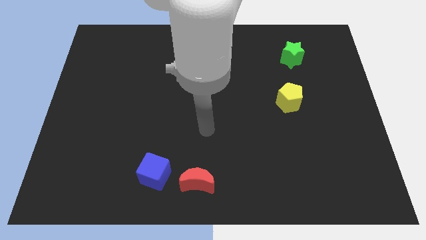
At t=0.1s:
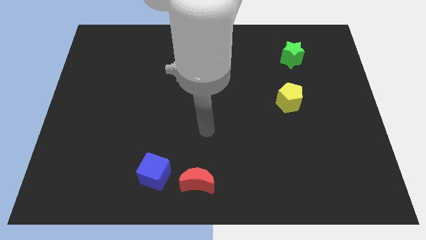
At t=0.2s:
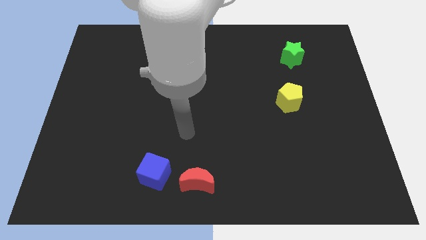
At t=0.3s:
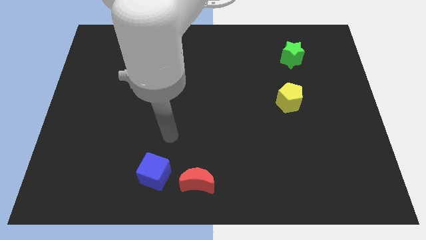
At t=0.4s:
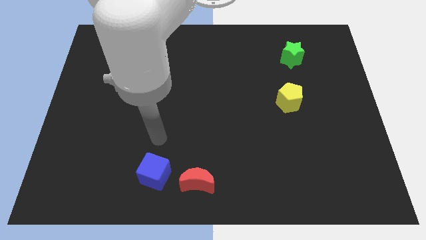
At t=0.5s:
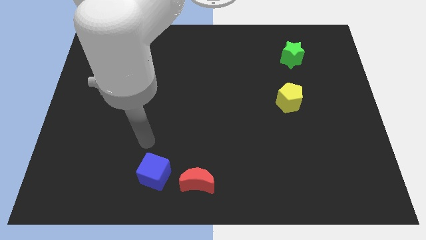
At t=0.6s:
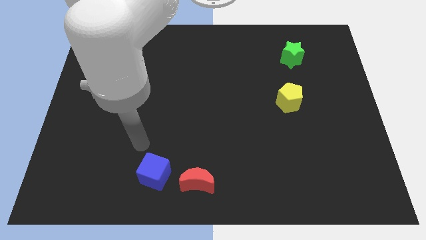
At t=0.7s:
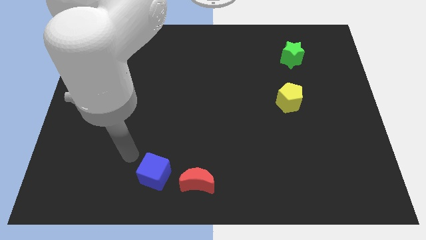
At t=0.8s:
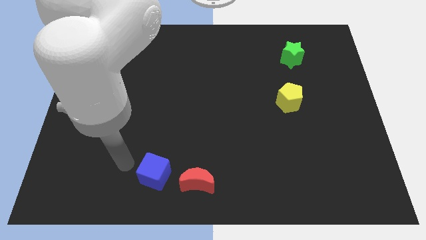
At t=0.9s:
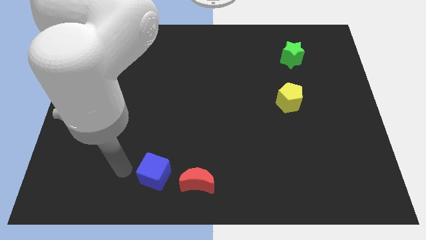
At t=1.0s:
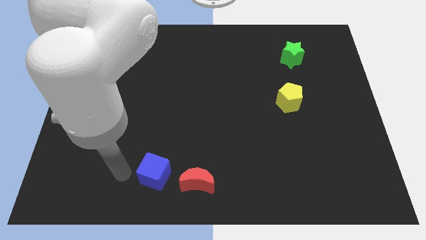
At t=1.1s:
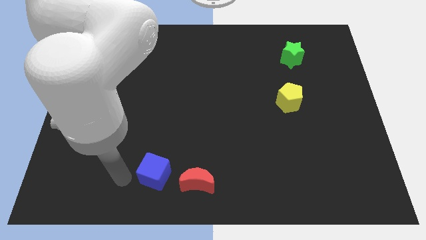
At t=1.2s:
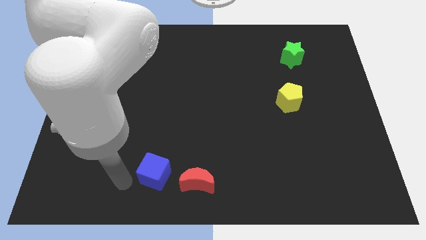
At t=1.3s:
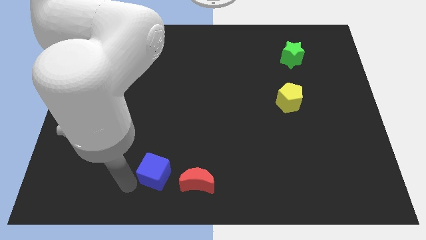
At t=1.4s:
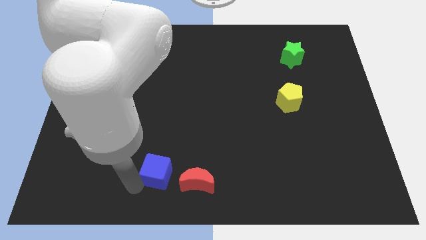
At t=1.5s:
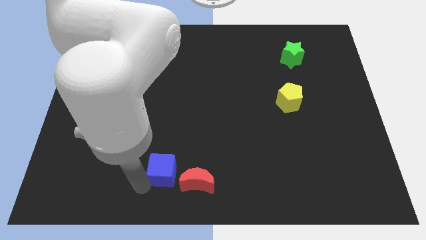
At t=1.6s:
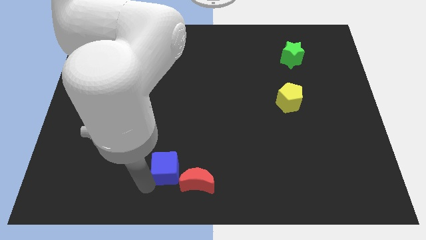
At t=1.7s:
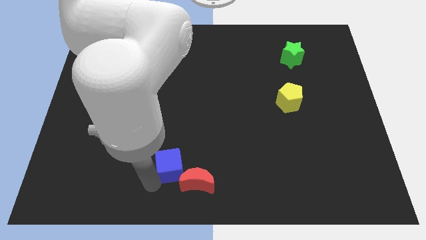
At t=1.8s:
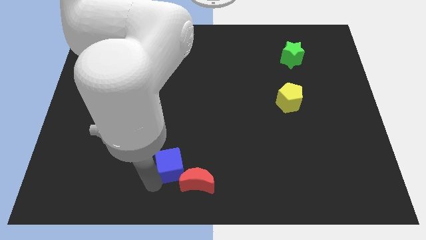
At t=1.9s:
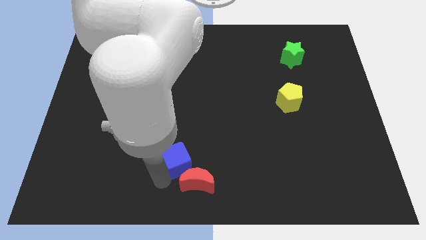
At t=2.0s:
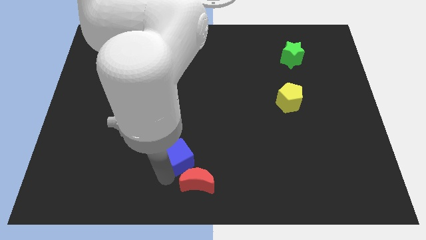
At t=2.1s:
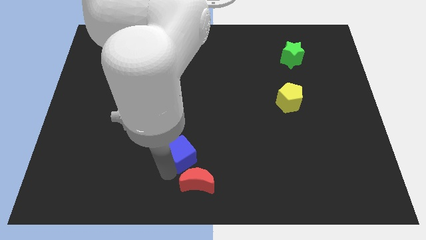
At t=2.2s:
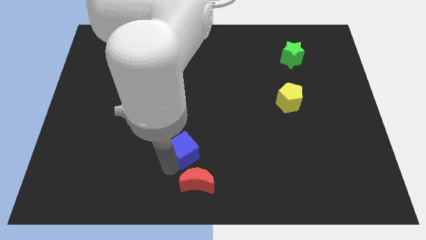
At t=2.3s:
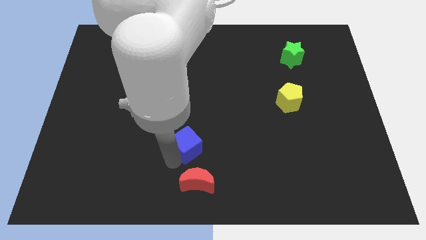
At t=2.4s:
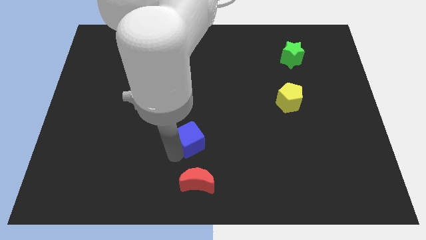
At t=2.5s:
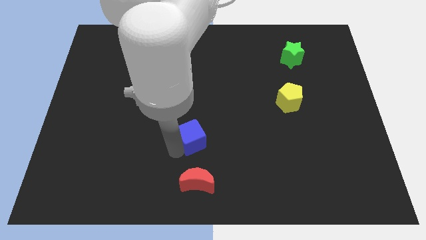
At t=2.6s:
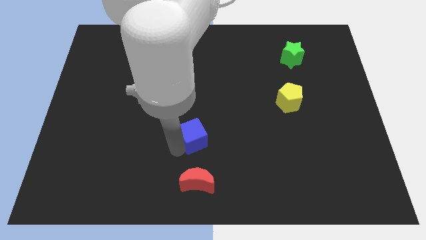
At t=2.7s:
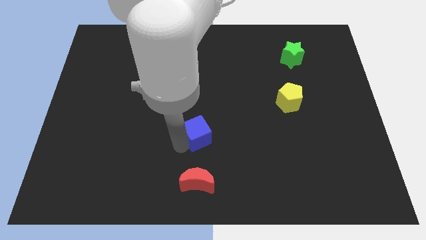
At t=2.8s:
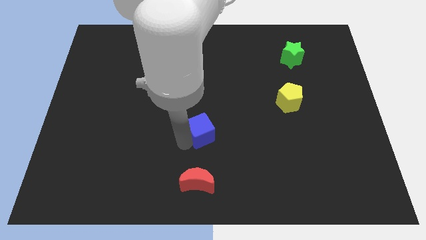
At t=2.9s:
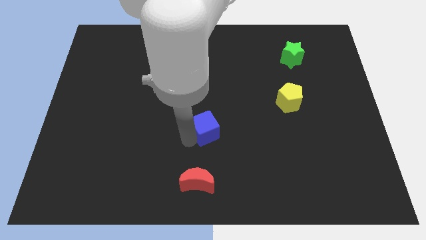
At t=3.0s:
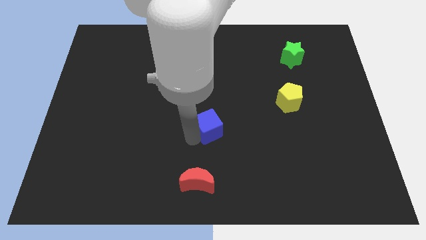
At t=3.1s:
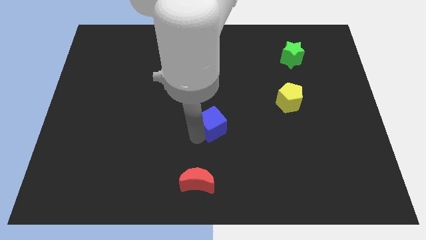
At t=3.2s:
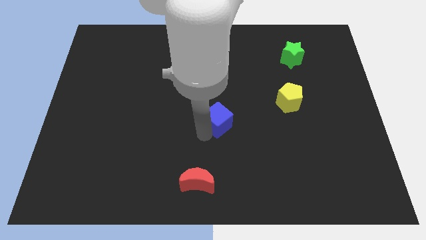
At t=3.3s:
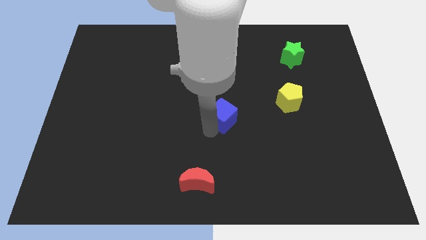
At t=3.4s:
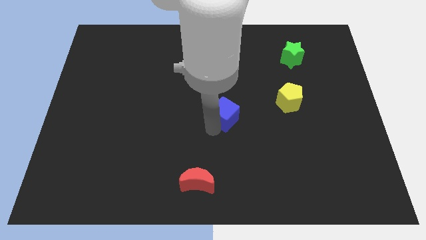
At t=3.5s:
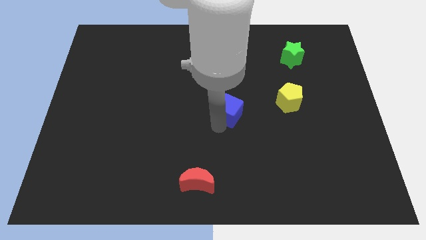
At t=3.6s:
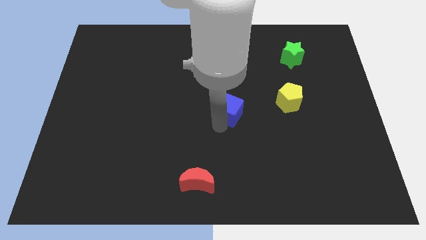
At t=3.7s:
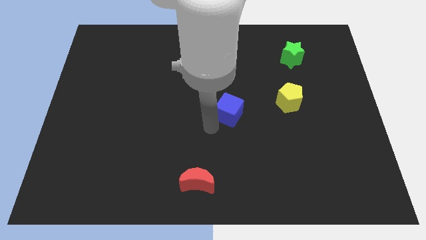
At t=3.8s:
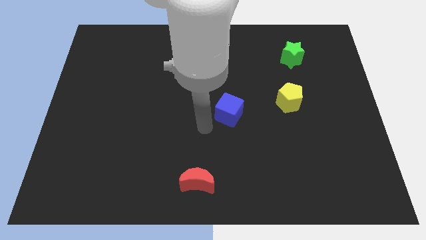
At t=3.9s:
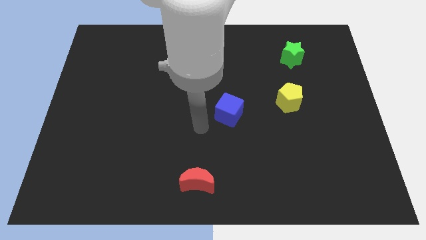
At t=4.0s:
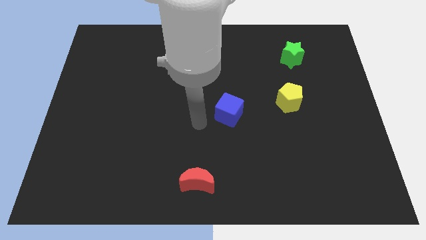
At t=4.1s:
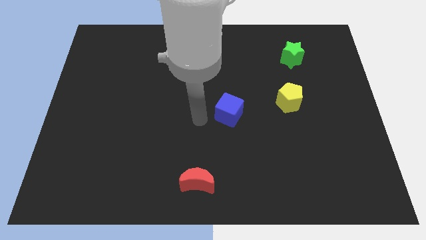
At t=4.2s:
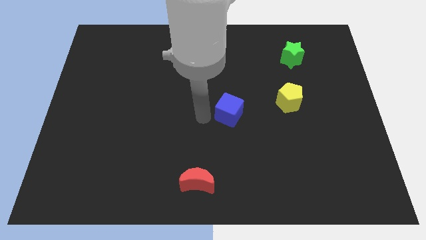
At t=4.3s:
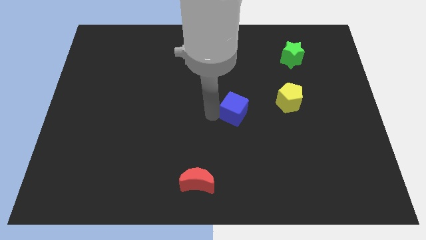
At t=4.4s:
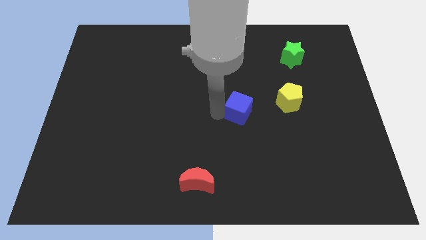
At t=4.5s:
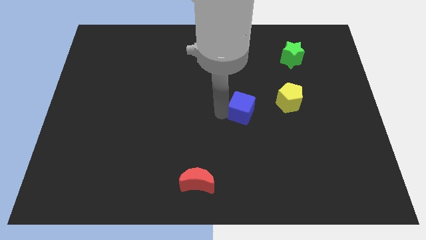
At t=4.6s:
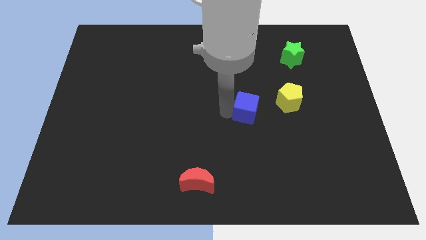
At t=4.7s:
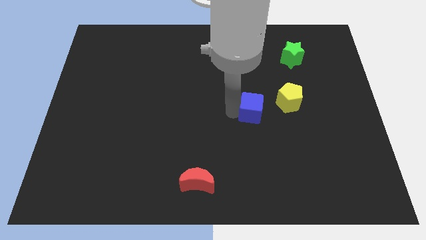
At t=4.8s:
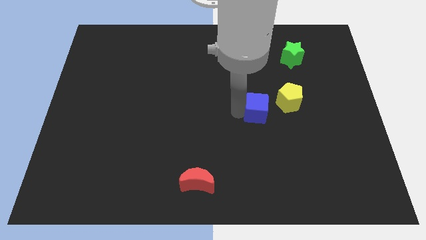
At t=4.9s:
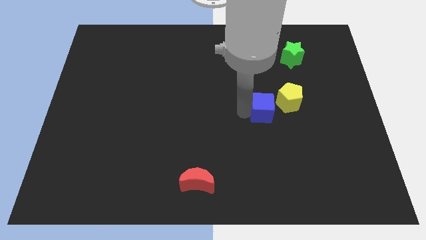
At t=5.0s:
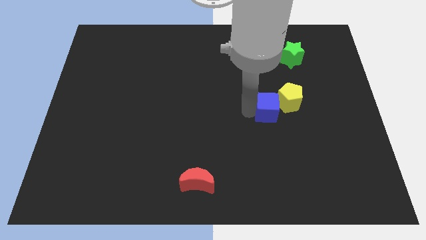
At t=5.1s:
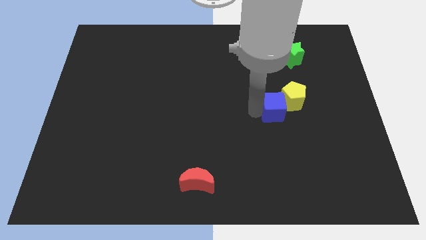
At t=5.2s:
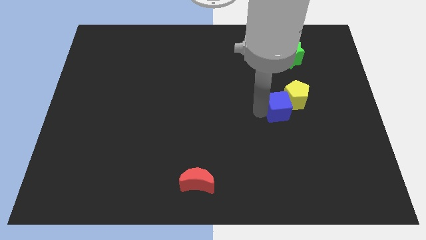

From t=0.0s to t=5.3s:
move the blue cube next to the pentagon

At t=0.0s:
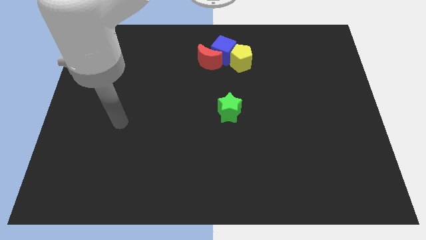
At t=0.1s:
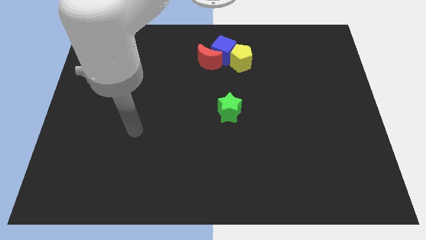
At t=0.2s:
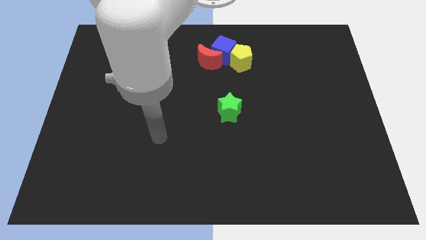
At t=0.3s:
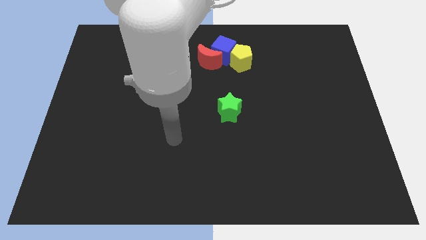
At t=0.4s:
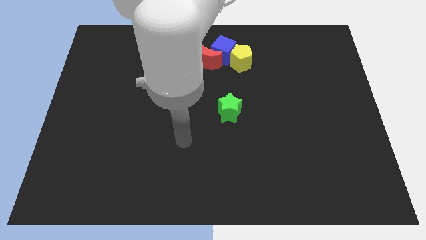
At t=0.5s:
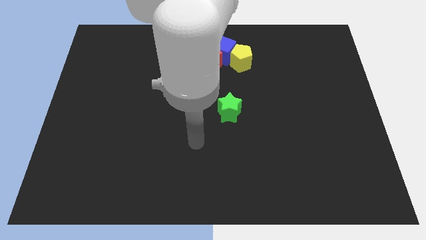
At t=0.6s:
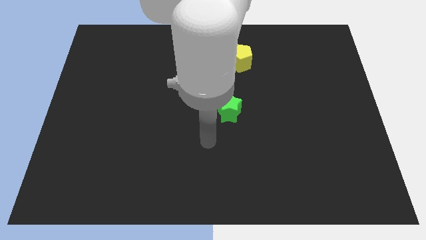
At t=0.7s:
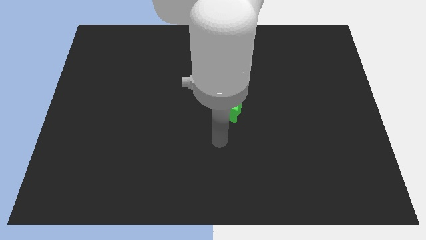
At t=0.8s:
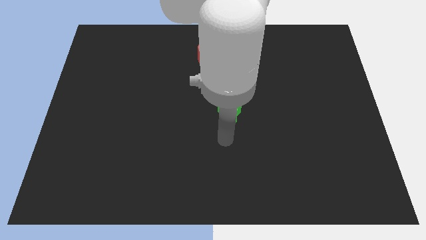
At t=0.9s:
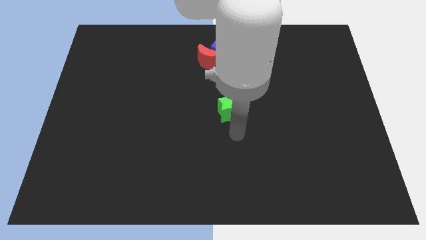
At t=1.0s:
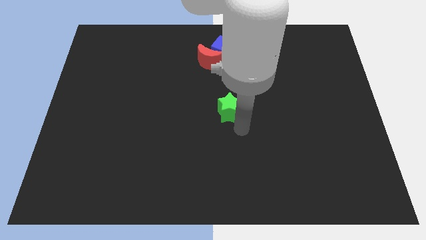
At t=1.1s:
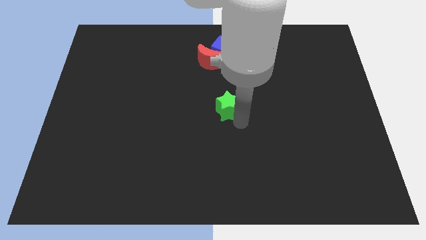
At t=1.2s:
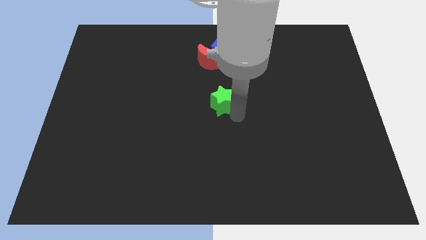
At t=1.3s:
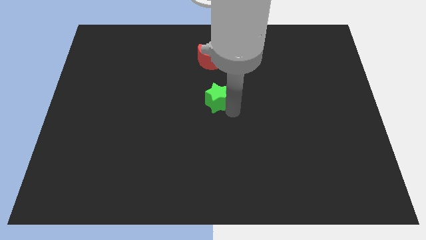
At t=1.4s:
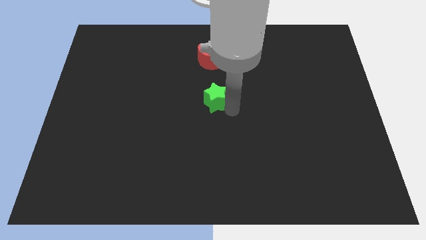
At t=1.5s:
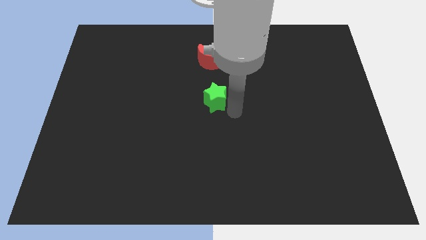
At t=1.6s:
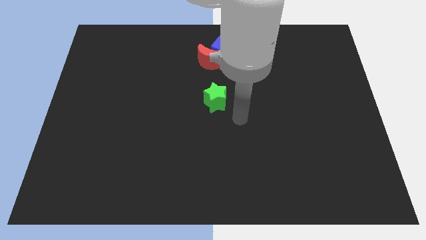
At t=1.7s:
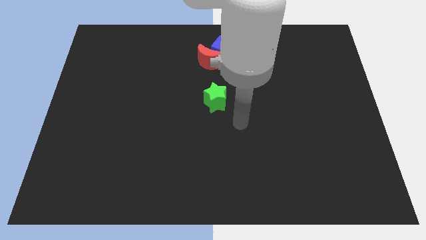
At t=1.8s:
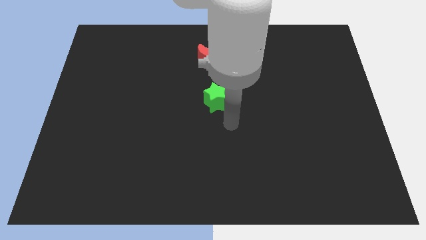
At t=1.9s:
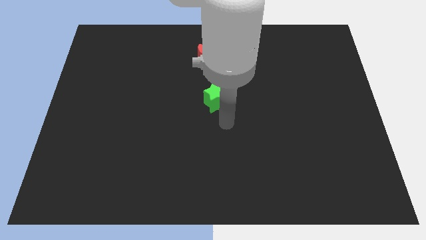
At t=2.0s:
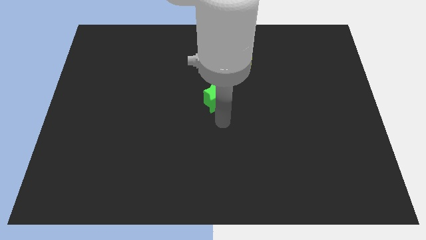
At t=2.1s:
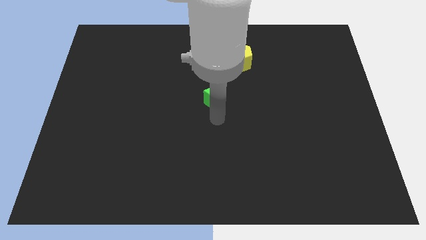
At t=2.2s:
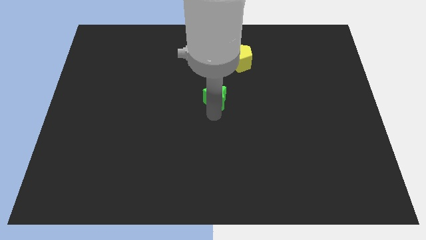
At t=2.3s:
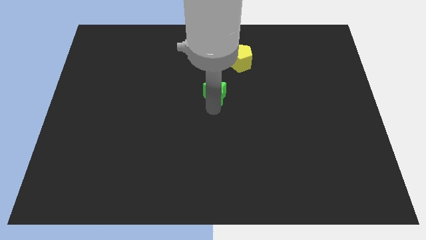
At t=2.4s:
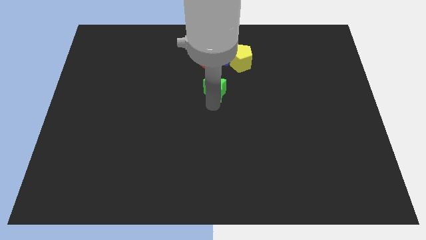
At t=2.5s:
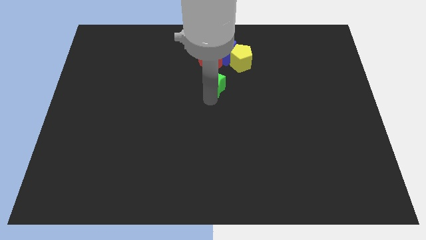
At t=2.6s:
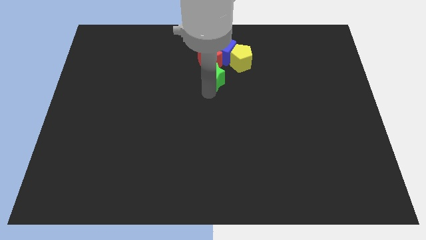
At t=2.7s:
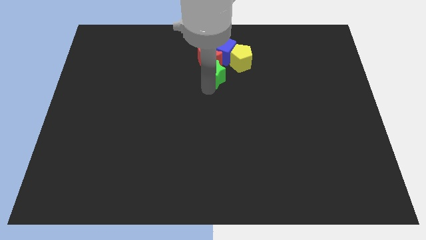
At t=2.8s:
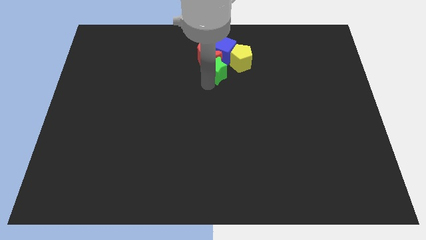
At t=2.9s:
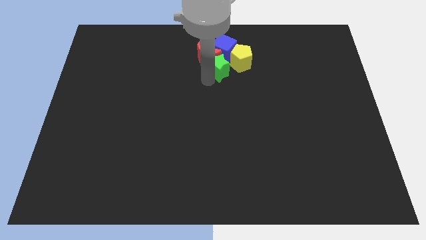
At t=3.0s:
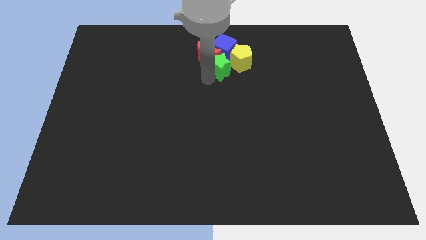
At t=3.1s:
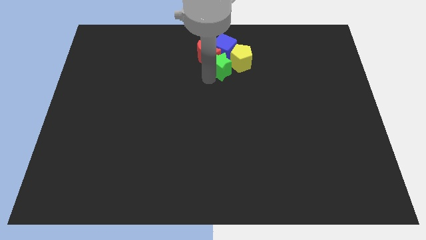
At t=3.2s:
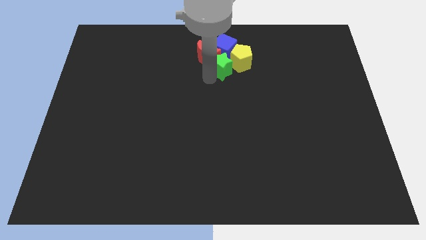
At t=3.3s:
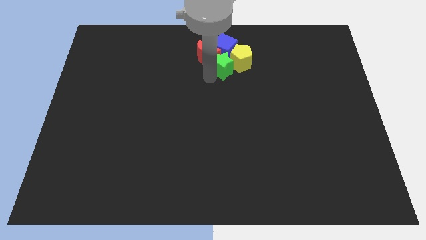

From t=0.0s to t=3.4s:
move the green block towards the cube
